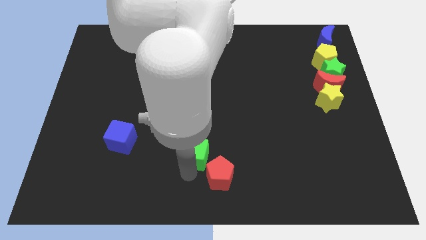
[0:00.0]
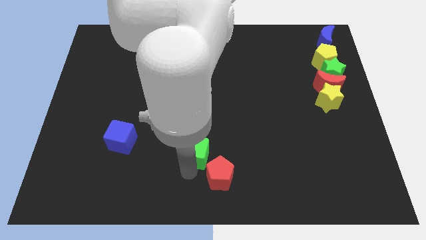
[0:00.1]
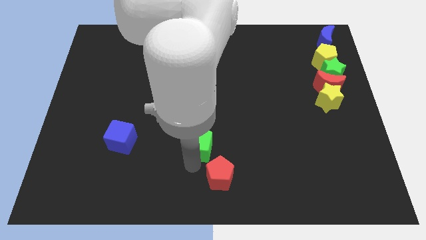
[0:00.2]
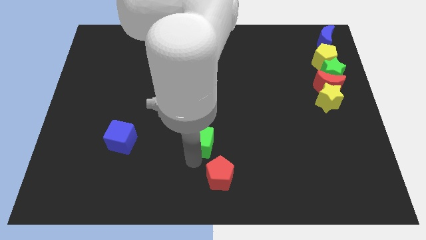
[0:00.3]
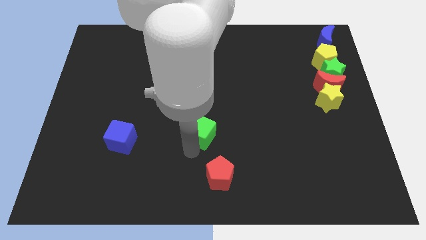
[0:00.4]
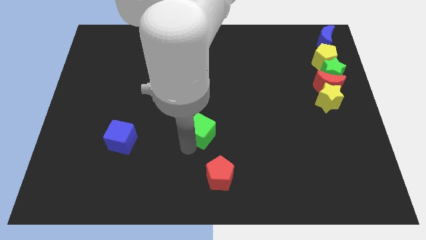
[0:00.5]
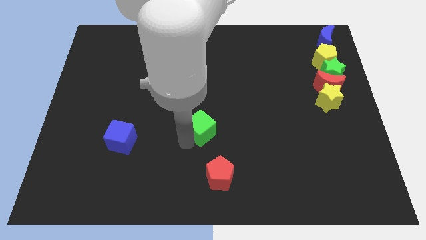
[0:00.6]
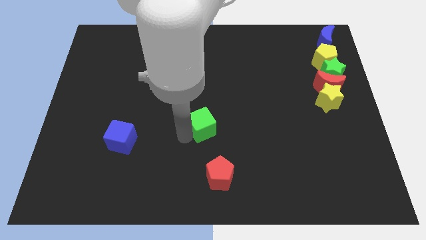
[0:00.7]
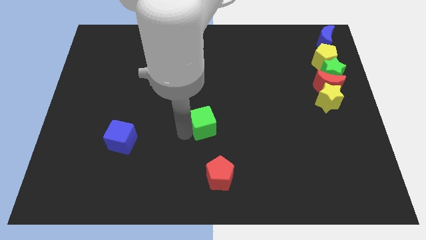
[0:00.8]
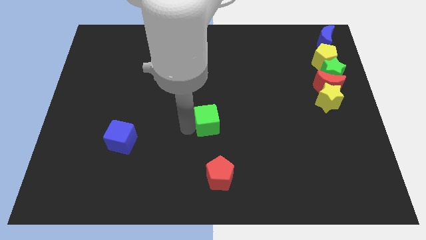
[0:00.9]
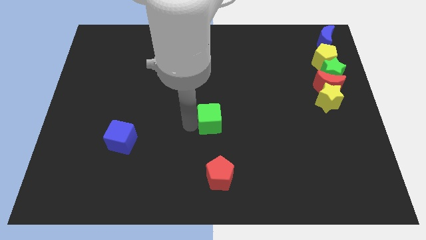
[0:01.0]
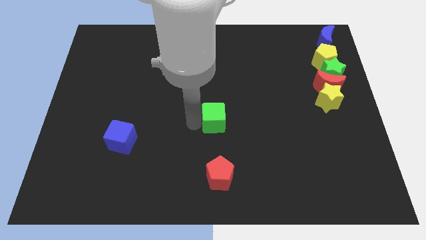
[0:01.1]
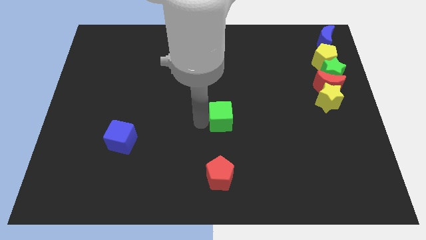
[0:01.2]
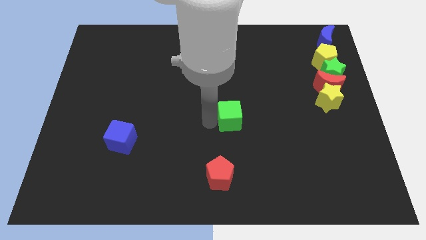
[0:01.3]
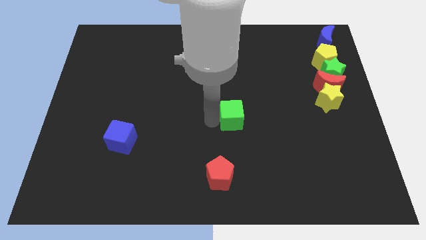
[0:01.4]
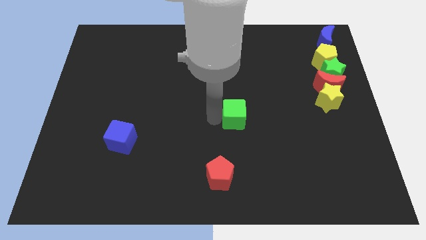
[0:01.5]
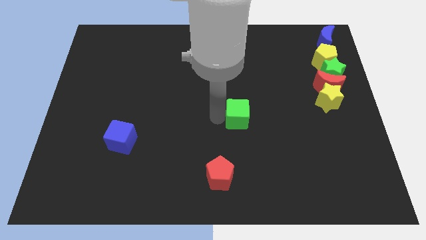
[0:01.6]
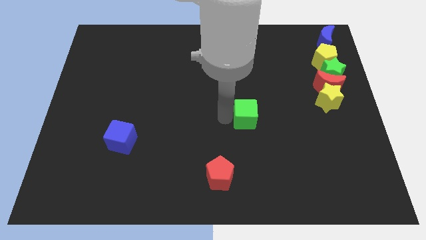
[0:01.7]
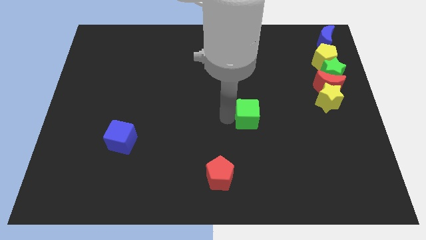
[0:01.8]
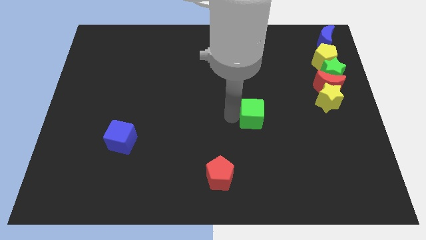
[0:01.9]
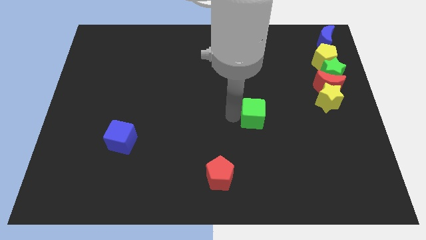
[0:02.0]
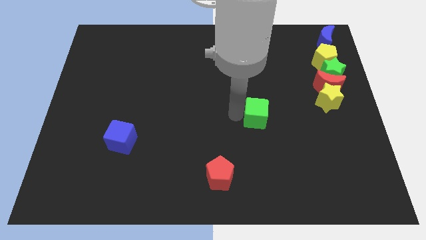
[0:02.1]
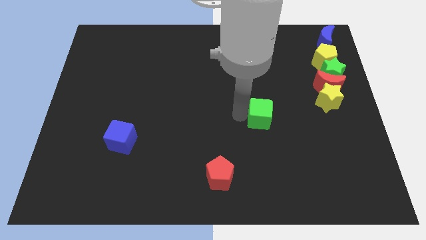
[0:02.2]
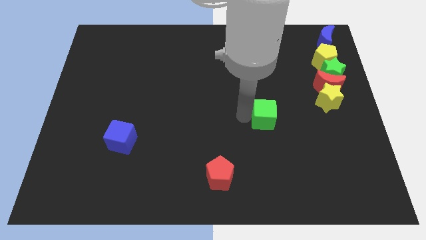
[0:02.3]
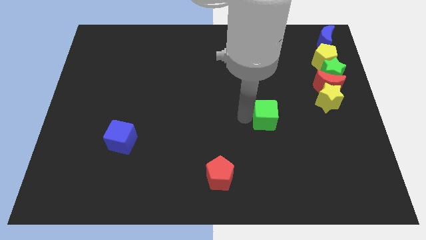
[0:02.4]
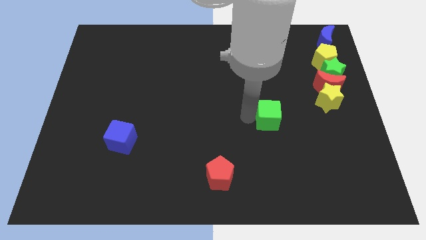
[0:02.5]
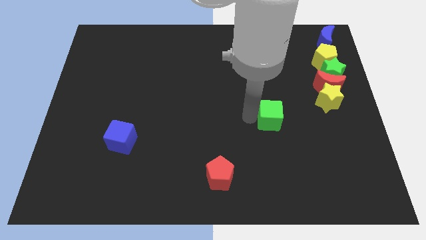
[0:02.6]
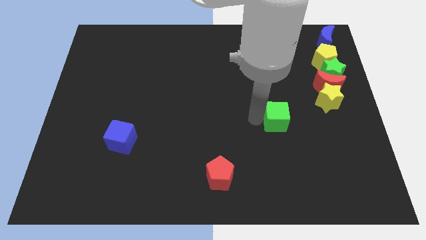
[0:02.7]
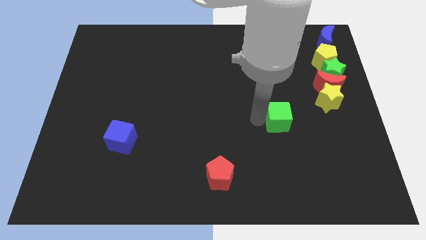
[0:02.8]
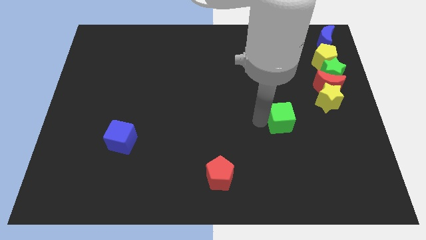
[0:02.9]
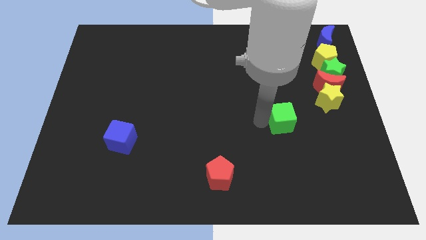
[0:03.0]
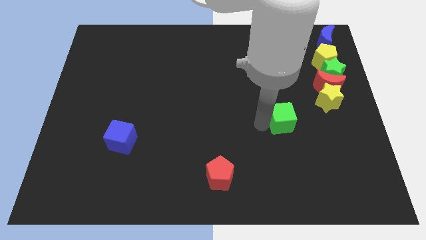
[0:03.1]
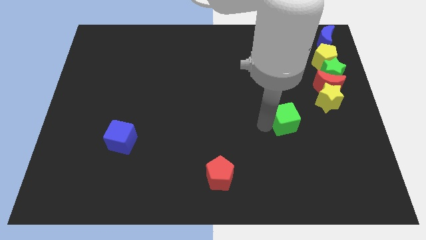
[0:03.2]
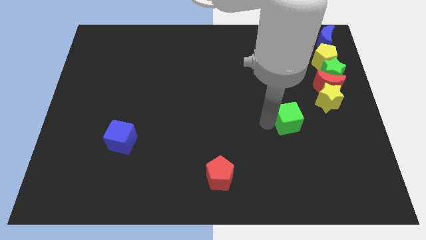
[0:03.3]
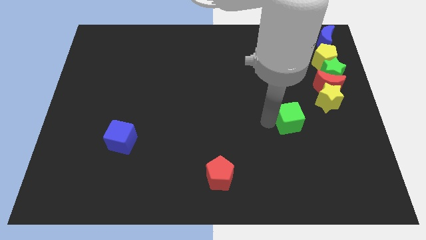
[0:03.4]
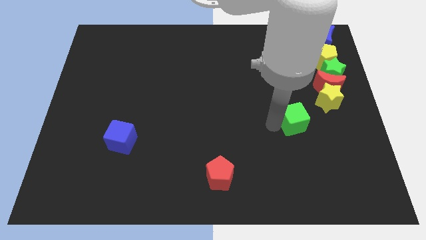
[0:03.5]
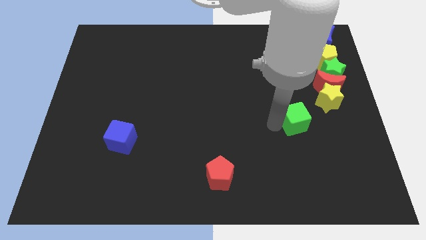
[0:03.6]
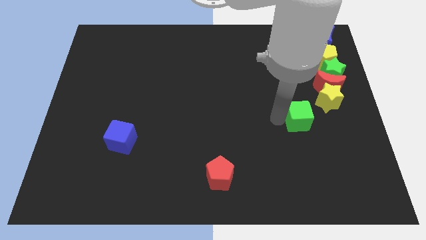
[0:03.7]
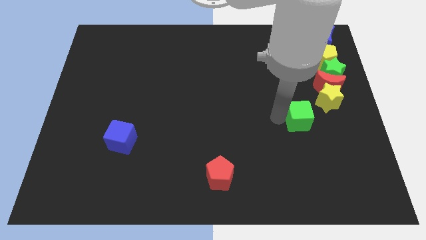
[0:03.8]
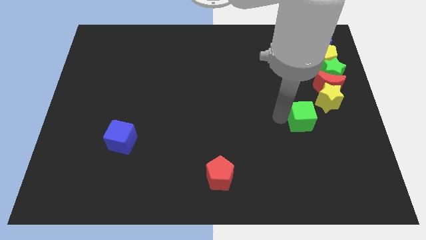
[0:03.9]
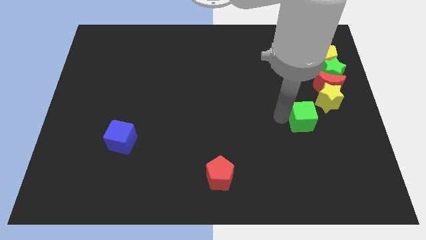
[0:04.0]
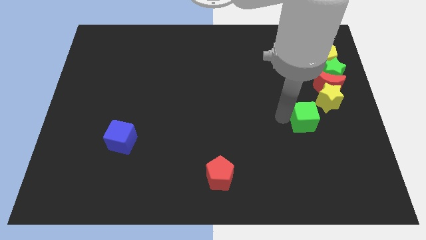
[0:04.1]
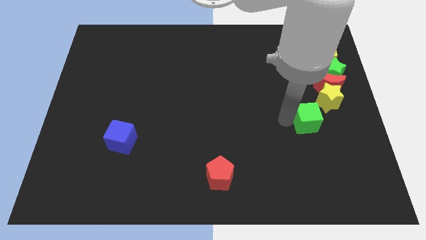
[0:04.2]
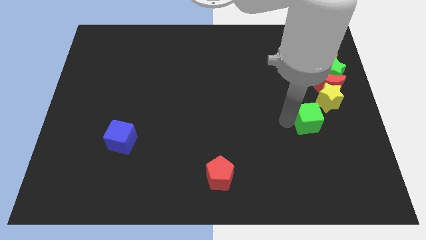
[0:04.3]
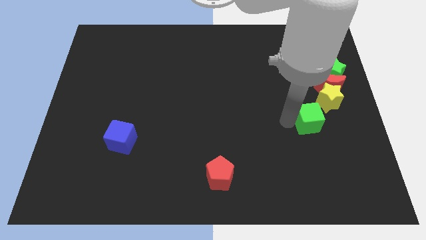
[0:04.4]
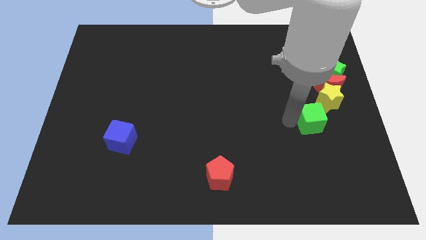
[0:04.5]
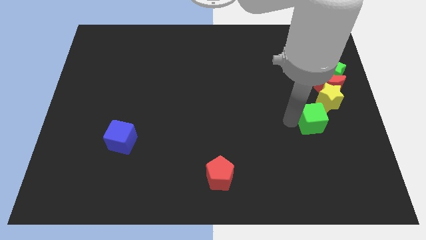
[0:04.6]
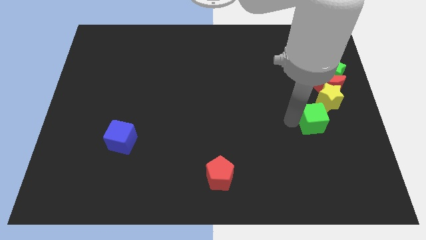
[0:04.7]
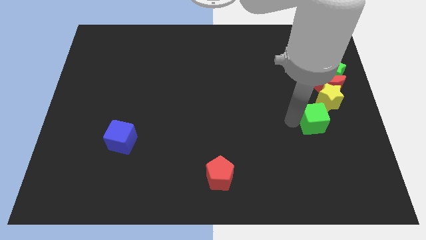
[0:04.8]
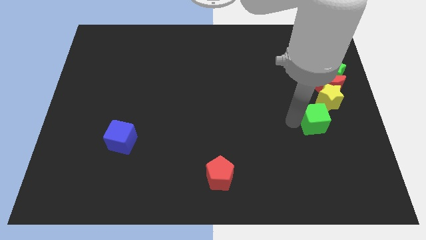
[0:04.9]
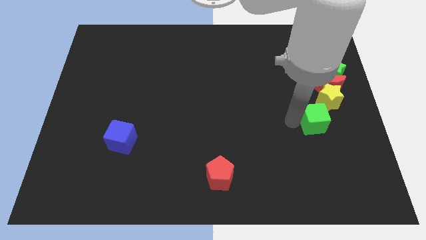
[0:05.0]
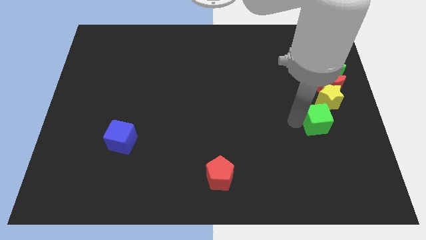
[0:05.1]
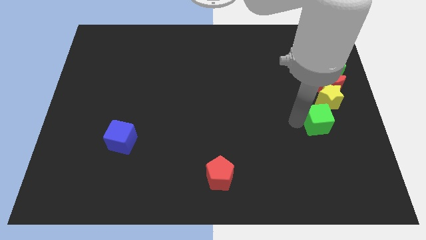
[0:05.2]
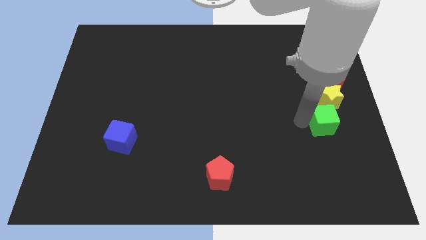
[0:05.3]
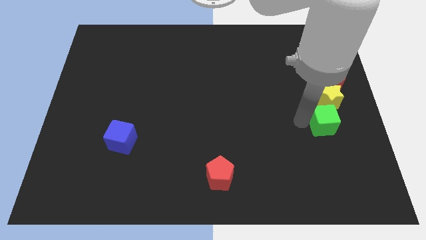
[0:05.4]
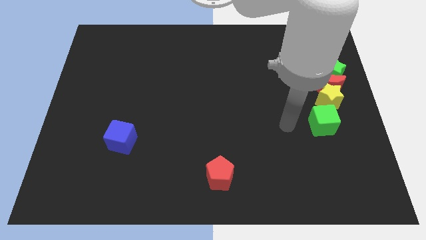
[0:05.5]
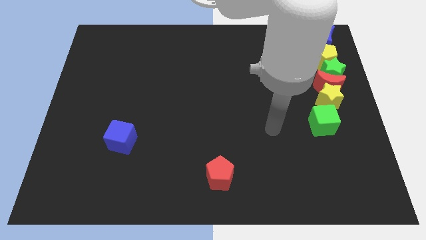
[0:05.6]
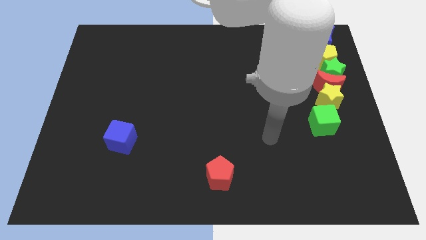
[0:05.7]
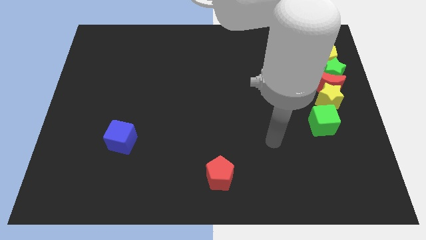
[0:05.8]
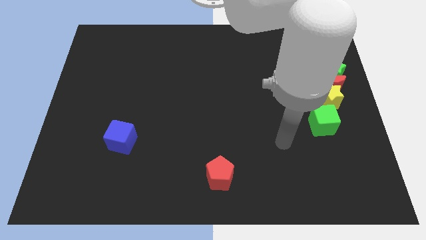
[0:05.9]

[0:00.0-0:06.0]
move the green cube at the bottom of the yellow star
